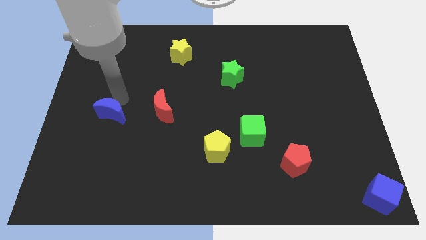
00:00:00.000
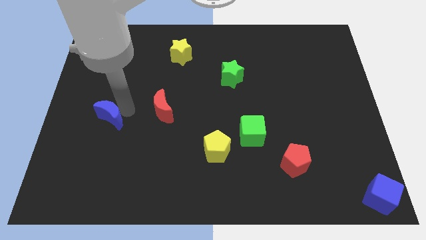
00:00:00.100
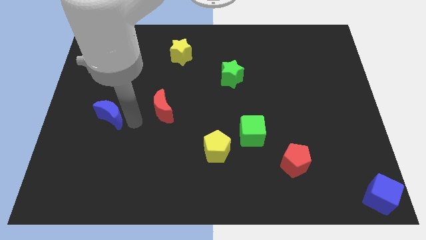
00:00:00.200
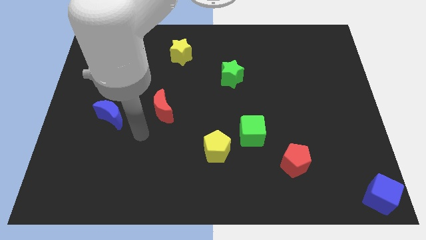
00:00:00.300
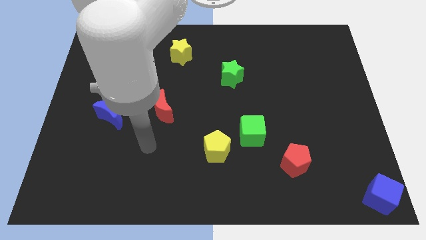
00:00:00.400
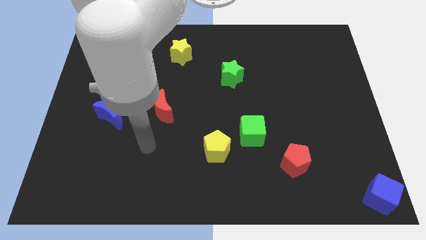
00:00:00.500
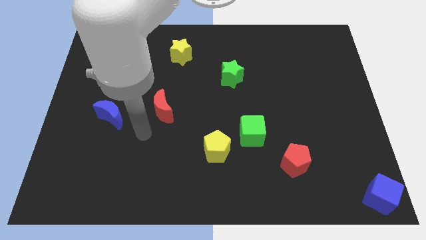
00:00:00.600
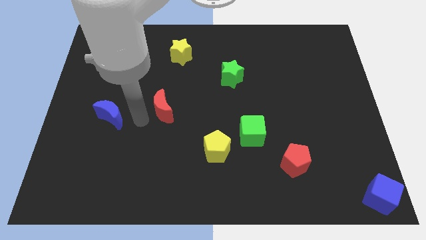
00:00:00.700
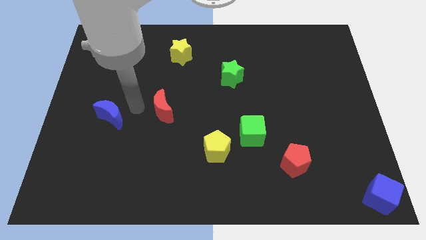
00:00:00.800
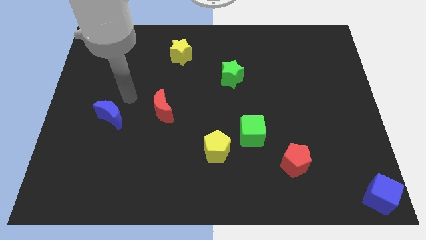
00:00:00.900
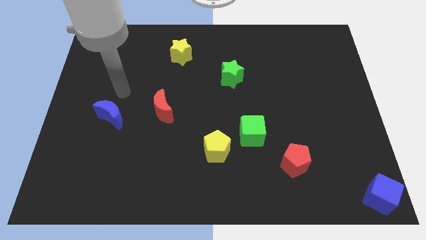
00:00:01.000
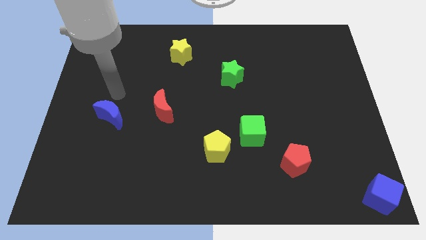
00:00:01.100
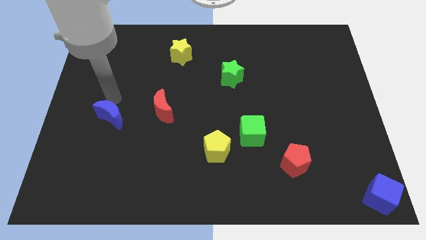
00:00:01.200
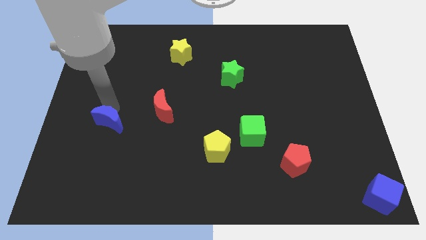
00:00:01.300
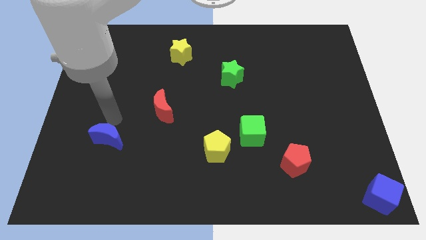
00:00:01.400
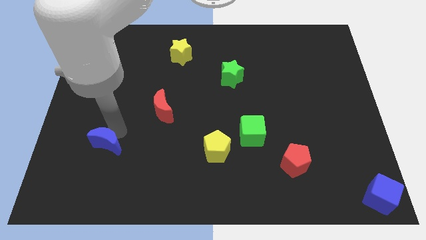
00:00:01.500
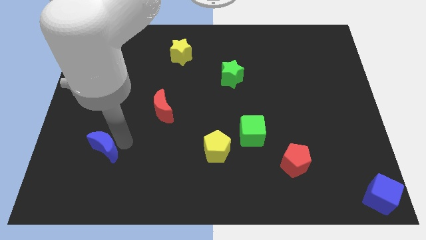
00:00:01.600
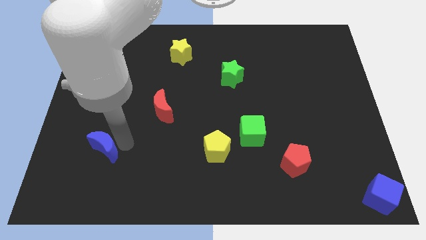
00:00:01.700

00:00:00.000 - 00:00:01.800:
place the blue crescent horizontally to the left side of the yellow pentagon

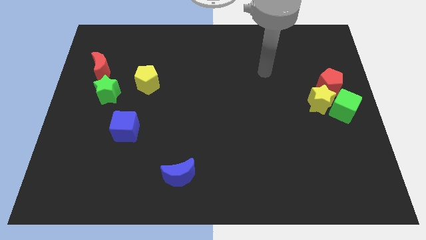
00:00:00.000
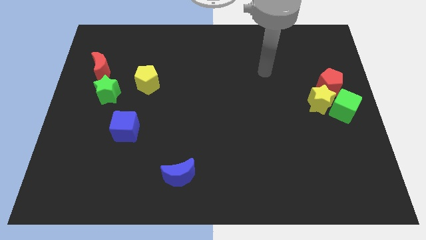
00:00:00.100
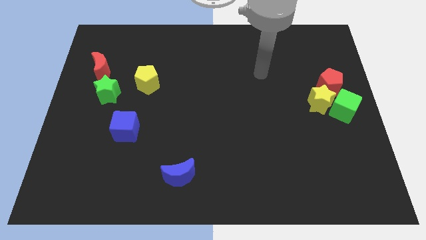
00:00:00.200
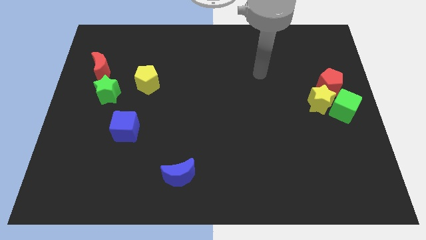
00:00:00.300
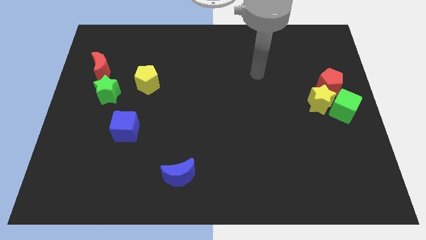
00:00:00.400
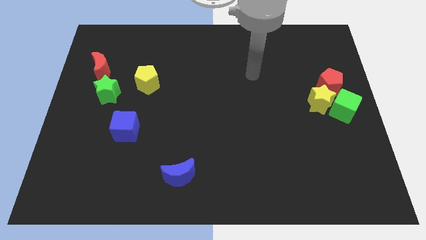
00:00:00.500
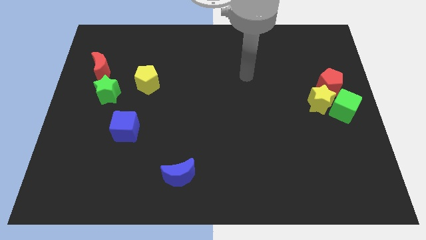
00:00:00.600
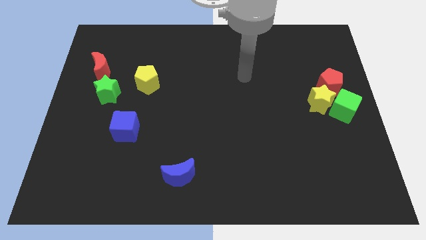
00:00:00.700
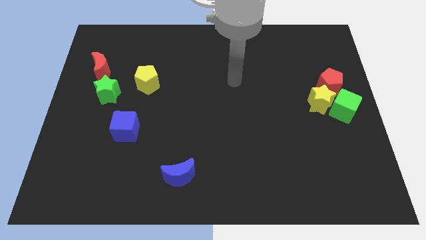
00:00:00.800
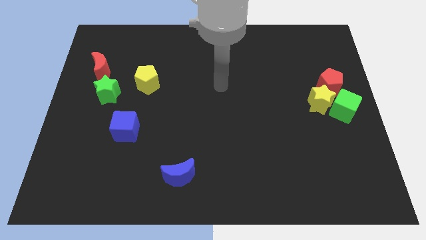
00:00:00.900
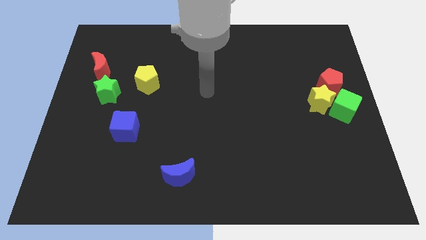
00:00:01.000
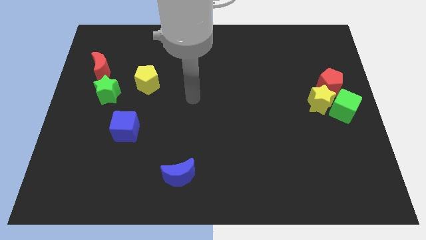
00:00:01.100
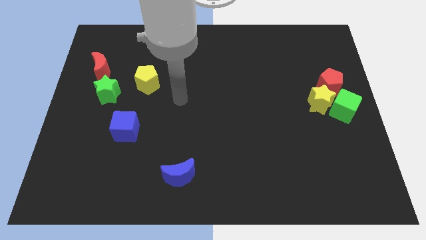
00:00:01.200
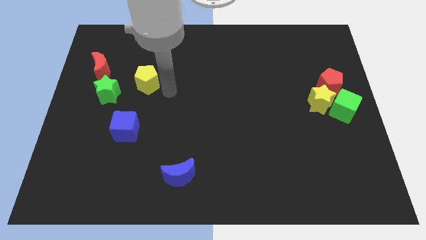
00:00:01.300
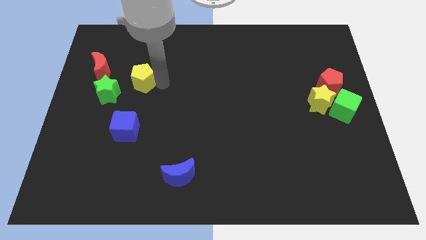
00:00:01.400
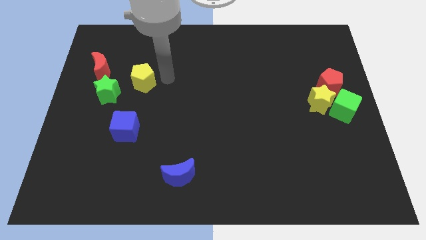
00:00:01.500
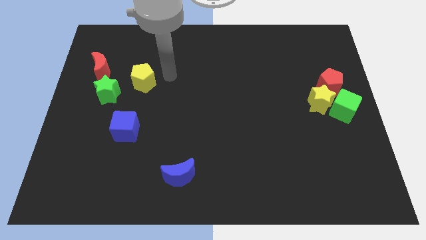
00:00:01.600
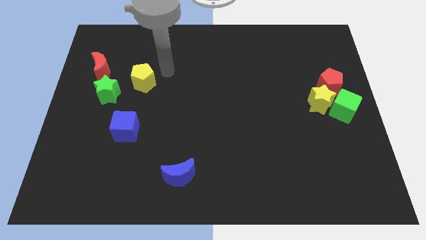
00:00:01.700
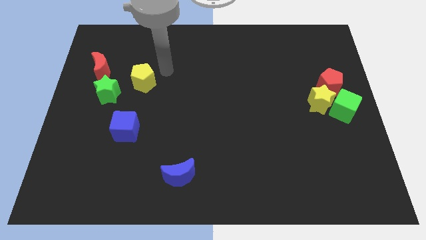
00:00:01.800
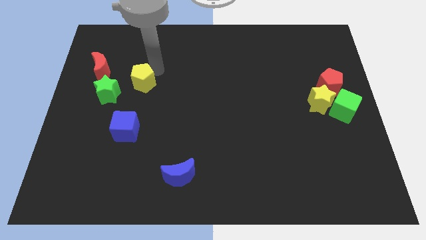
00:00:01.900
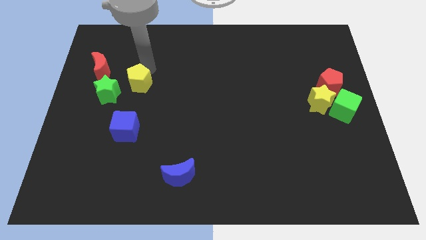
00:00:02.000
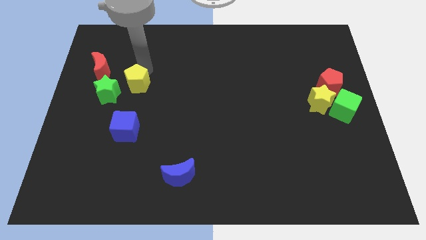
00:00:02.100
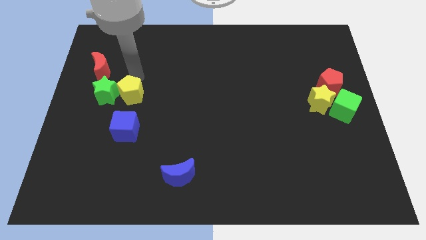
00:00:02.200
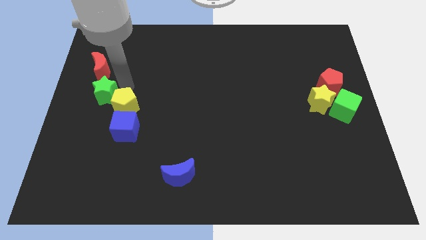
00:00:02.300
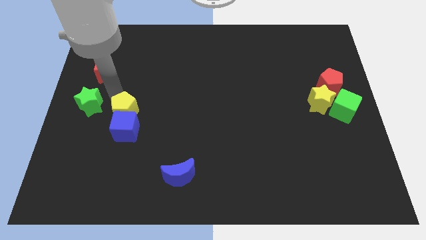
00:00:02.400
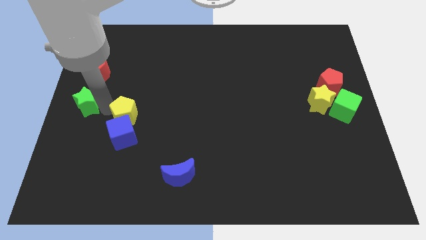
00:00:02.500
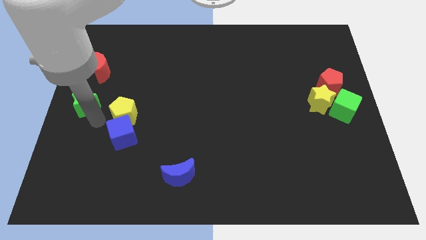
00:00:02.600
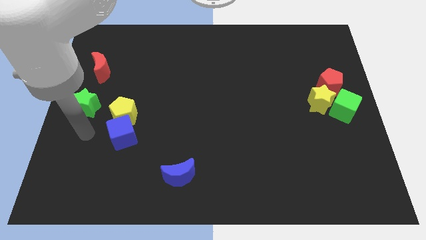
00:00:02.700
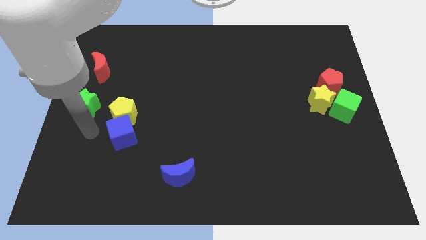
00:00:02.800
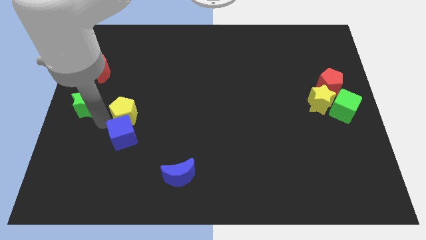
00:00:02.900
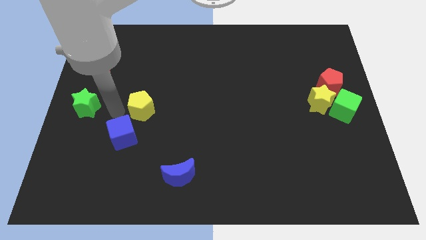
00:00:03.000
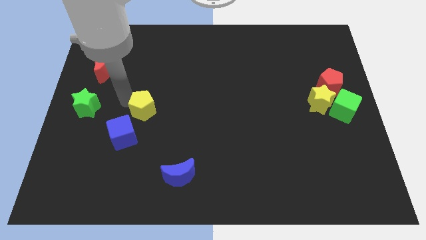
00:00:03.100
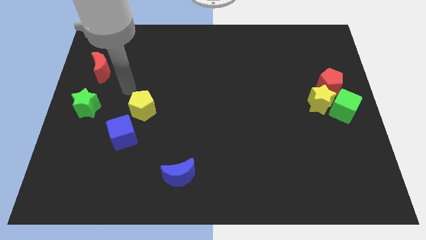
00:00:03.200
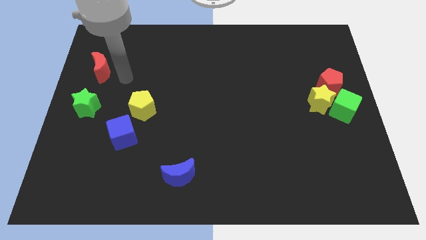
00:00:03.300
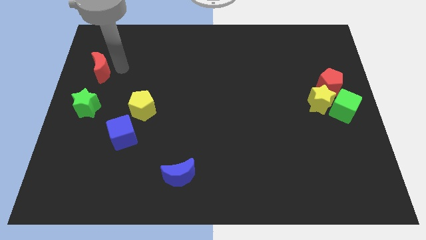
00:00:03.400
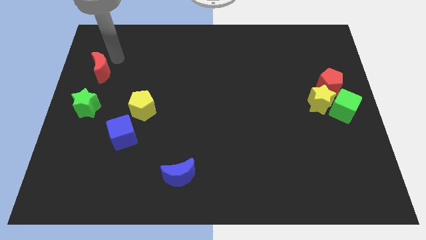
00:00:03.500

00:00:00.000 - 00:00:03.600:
place the green star below the red moon

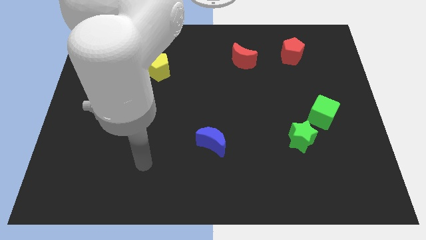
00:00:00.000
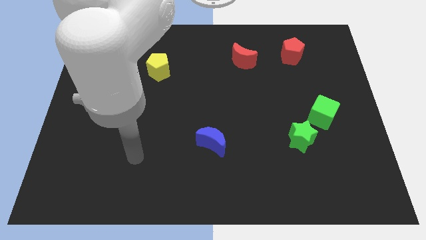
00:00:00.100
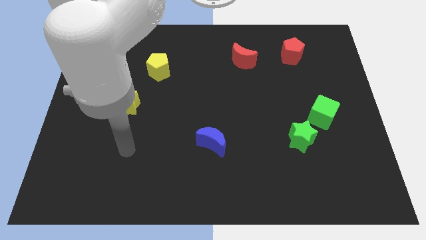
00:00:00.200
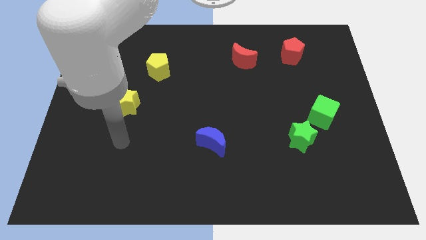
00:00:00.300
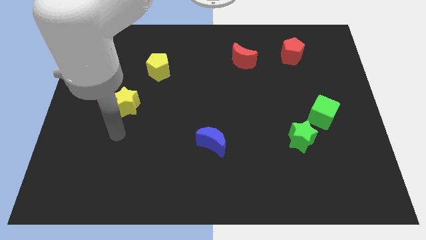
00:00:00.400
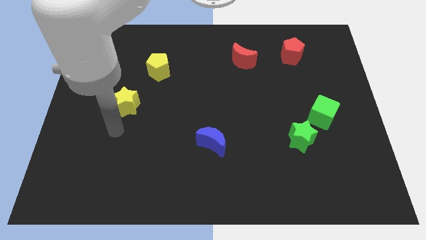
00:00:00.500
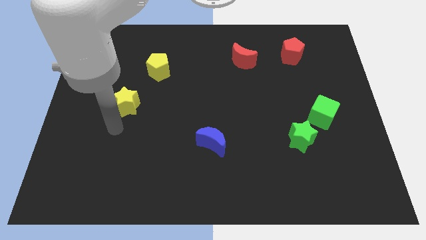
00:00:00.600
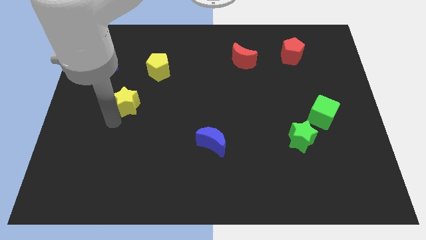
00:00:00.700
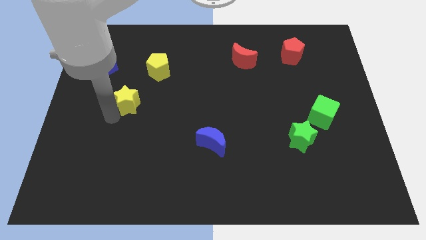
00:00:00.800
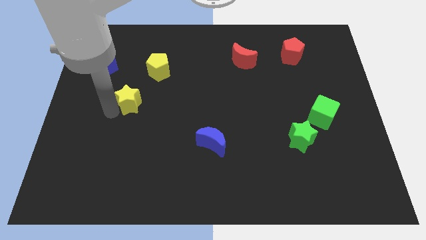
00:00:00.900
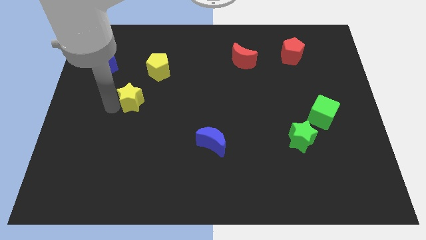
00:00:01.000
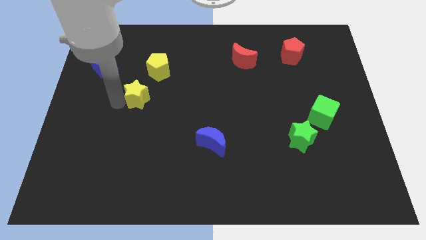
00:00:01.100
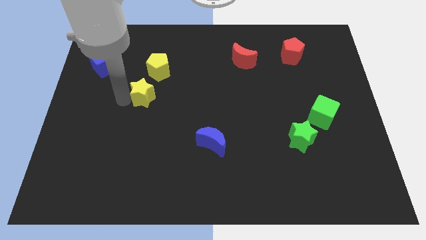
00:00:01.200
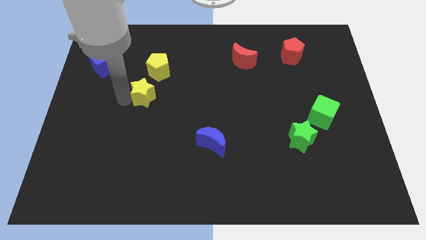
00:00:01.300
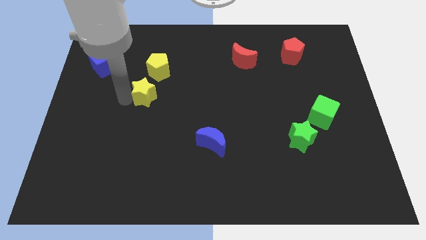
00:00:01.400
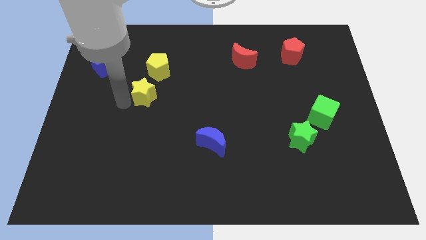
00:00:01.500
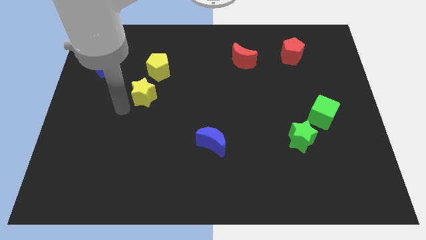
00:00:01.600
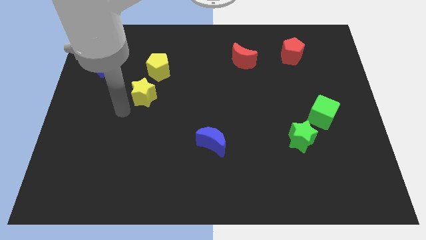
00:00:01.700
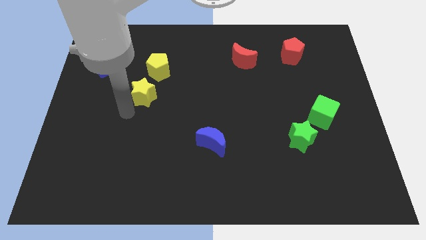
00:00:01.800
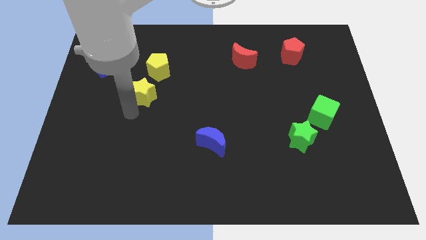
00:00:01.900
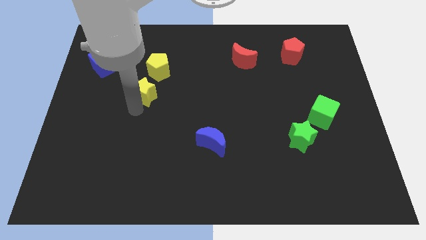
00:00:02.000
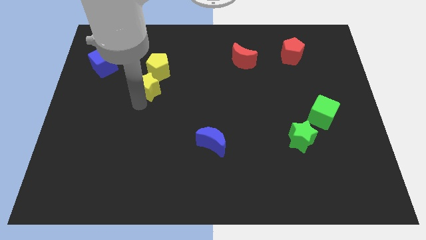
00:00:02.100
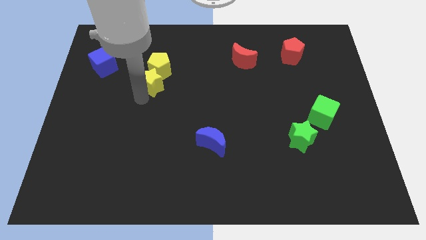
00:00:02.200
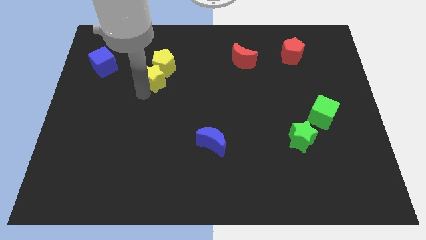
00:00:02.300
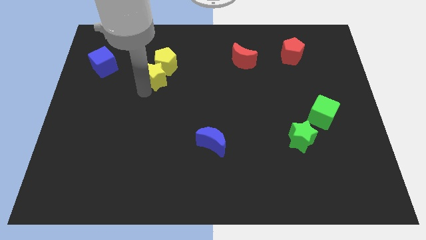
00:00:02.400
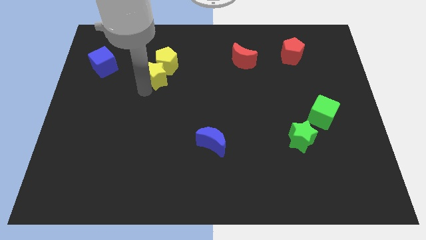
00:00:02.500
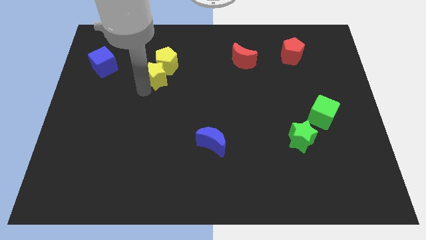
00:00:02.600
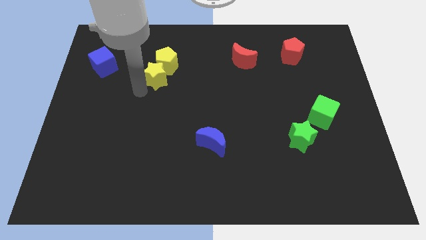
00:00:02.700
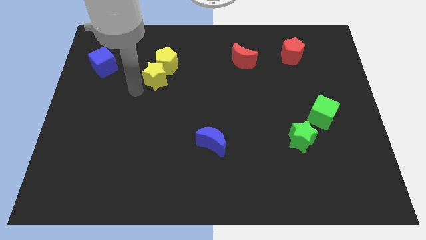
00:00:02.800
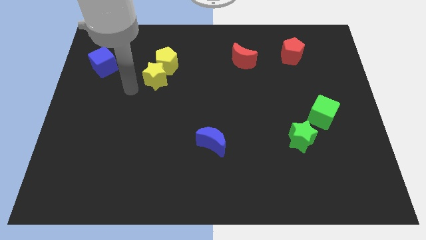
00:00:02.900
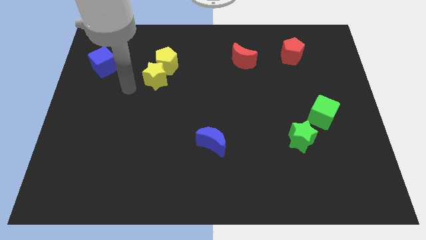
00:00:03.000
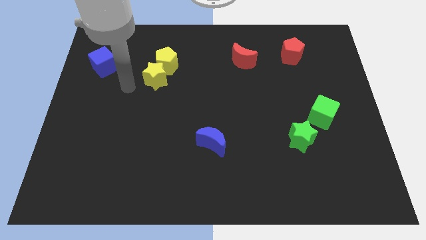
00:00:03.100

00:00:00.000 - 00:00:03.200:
push the yellow star into the yellow pentagon

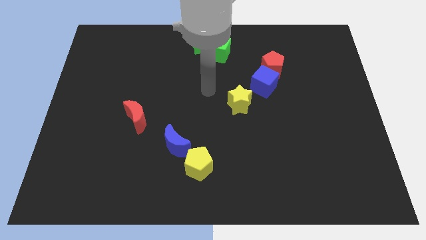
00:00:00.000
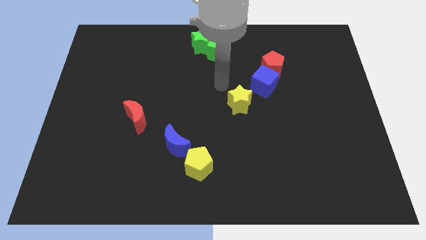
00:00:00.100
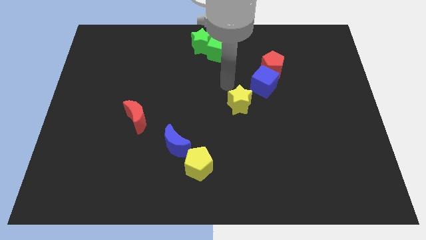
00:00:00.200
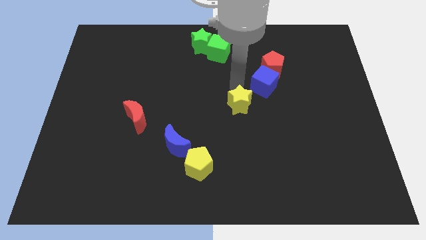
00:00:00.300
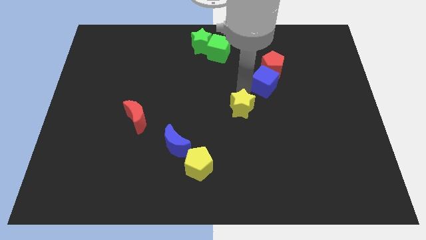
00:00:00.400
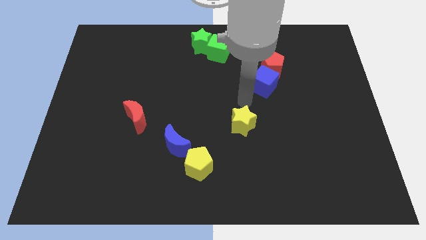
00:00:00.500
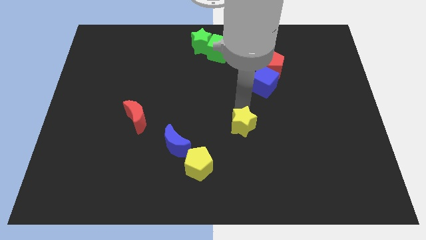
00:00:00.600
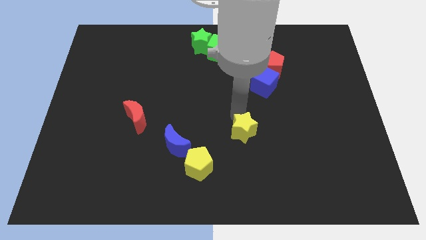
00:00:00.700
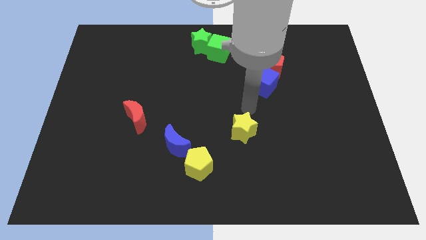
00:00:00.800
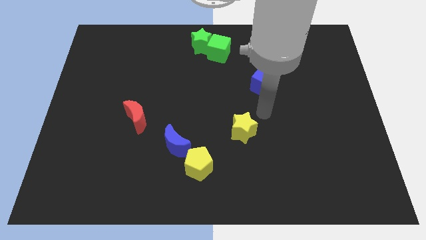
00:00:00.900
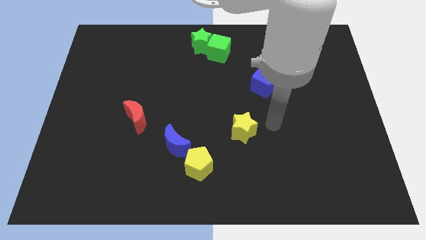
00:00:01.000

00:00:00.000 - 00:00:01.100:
push the yellow star towards the bottom center of the board
